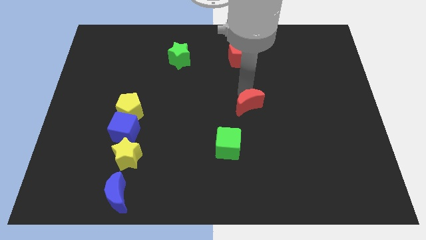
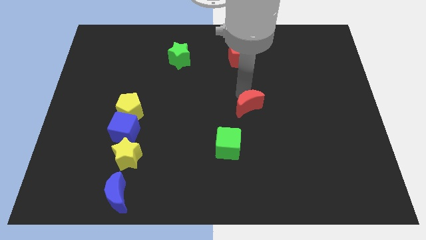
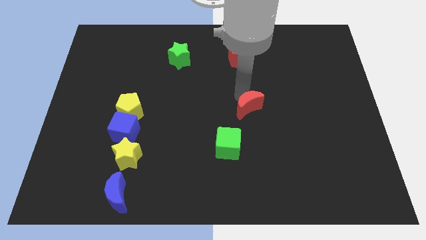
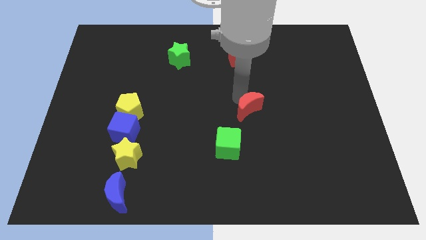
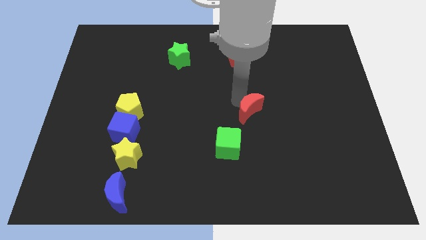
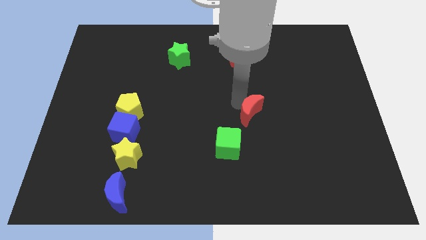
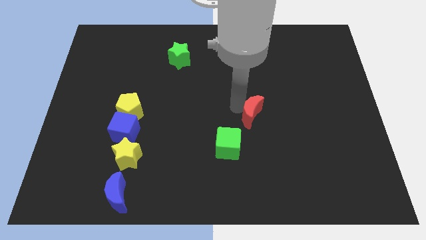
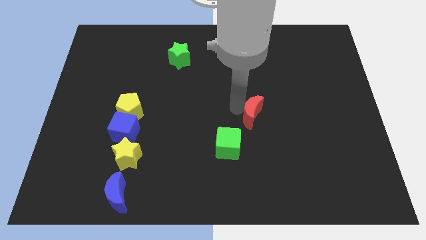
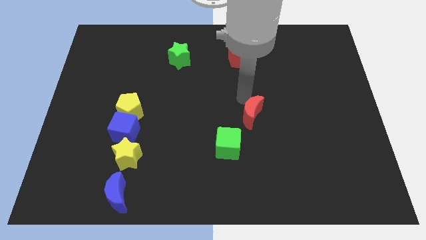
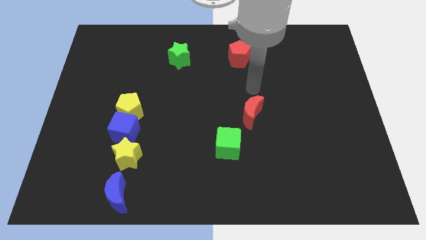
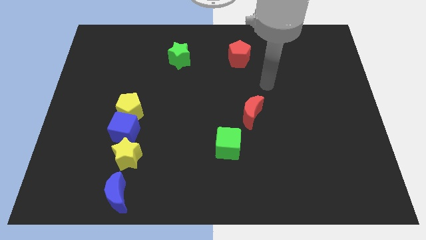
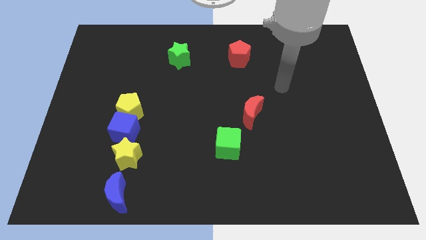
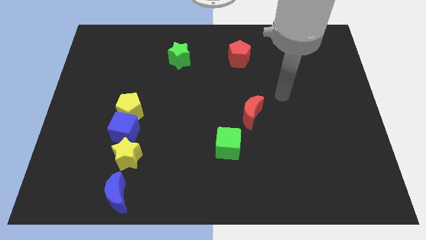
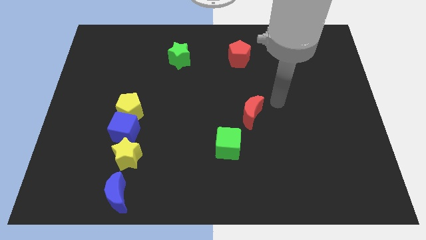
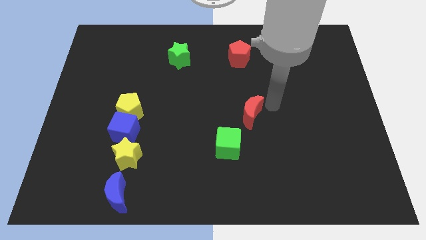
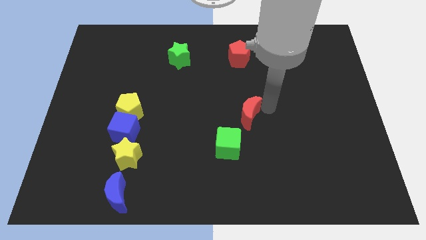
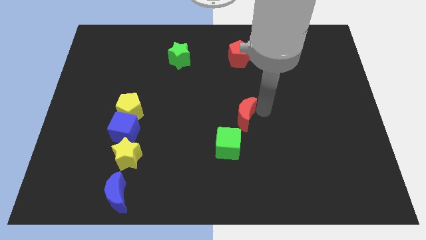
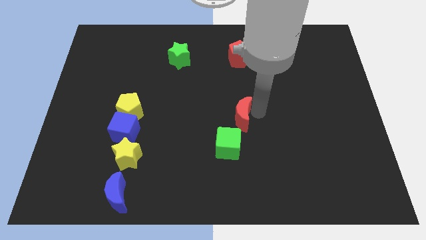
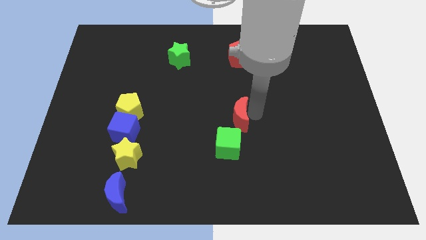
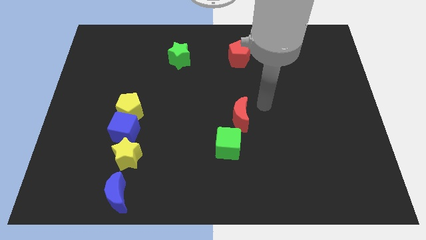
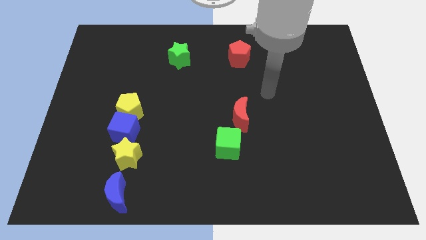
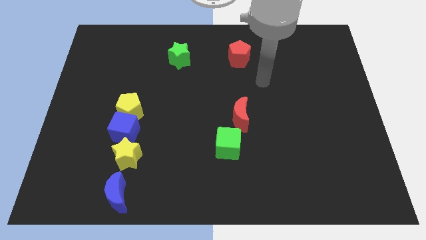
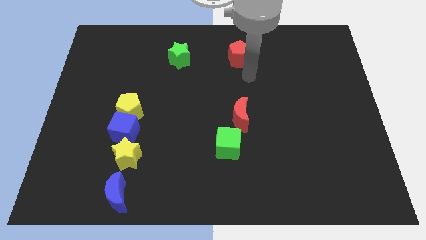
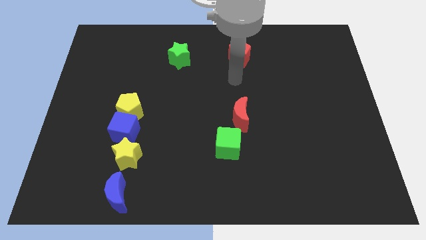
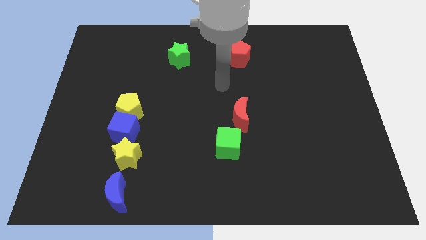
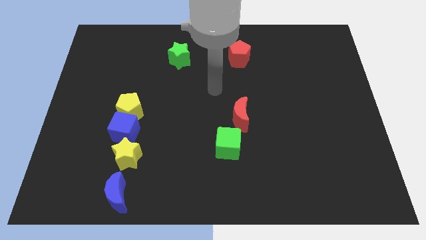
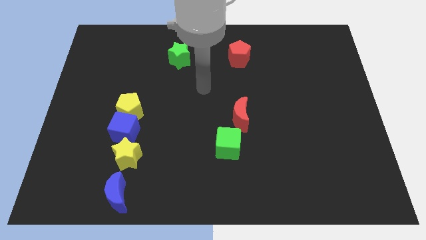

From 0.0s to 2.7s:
move the red moon horizontally on the right side of the yellow pentagon

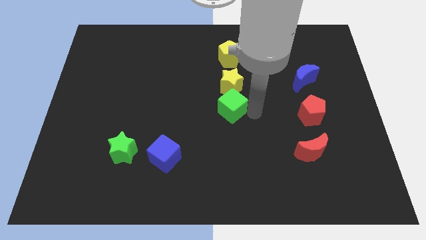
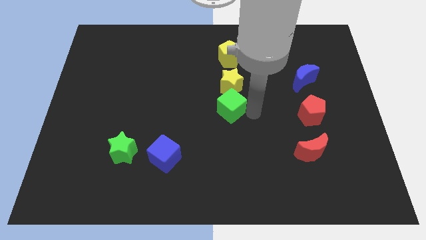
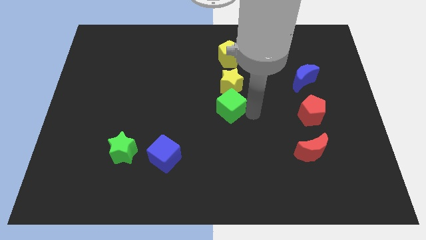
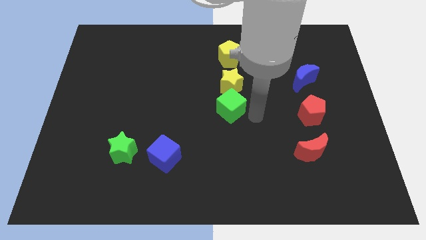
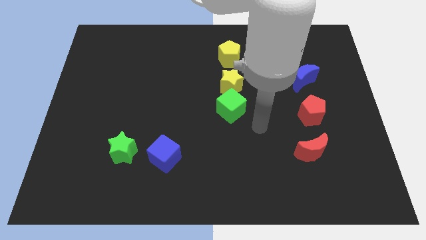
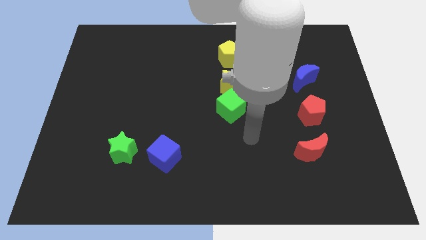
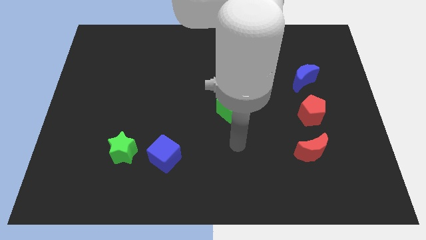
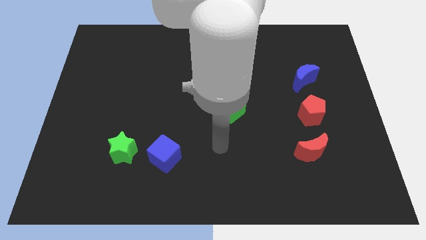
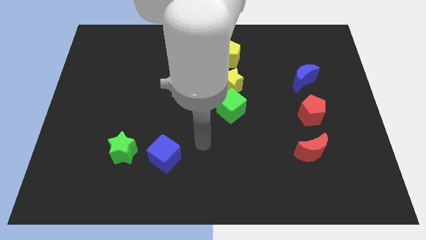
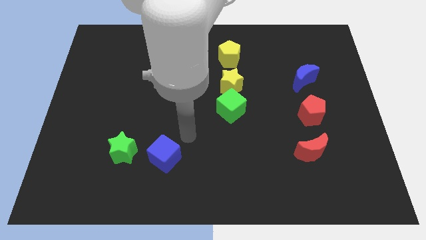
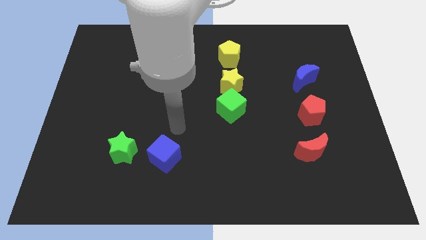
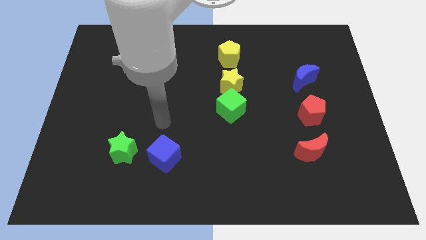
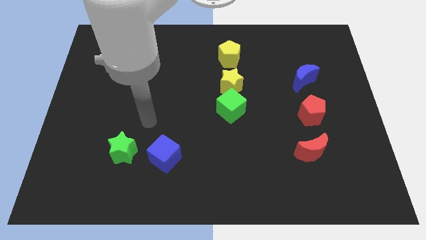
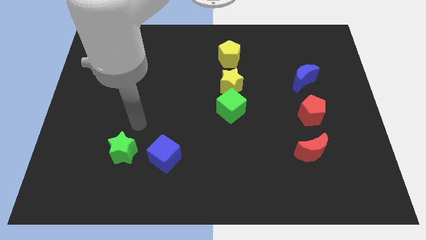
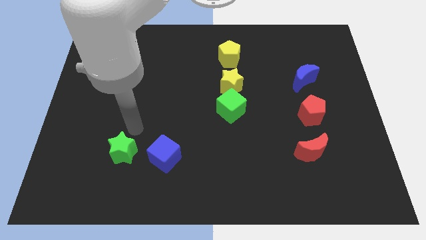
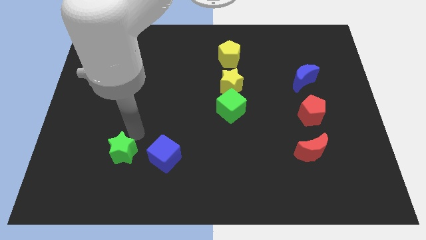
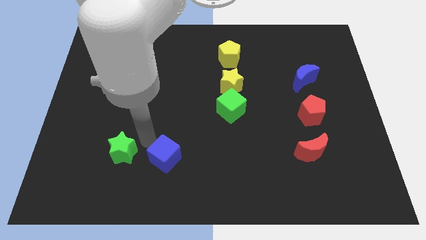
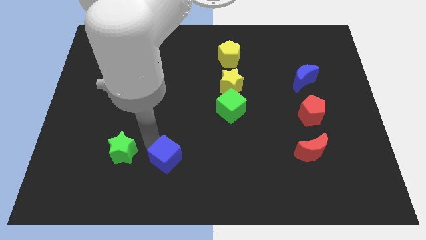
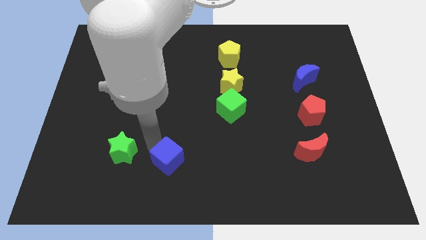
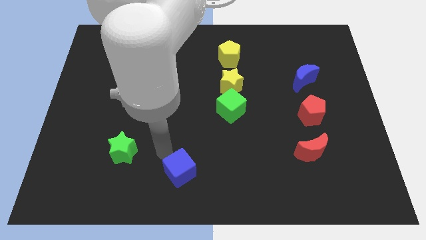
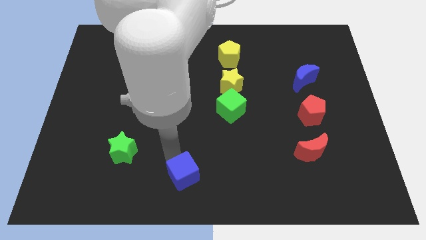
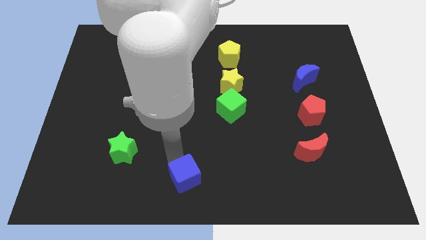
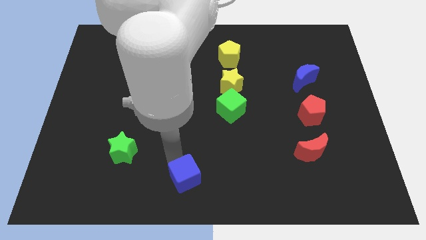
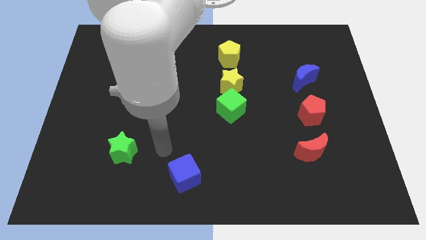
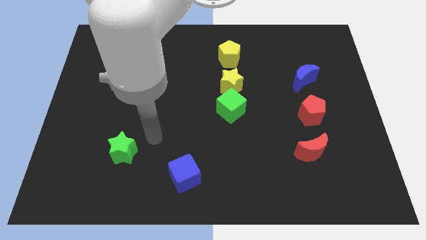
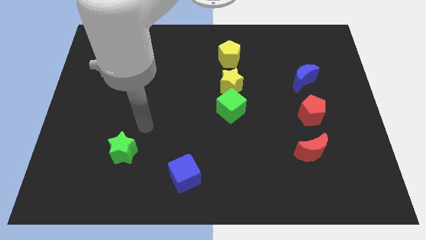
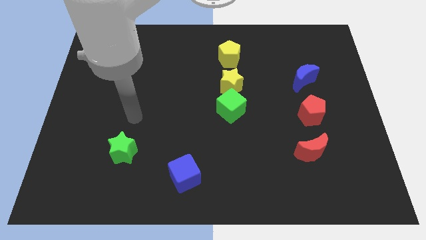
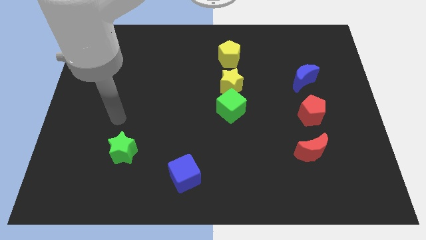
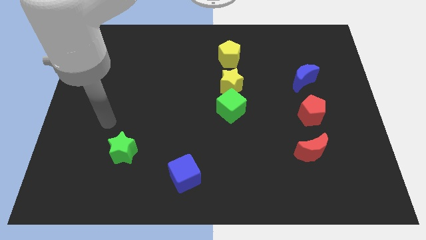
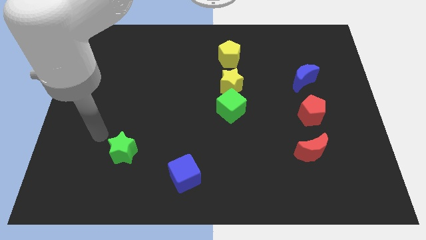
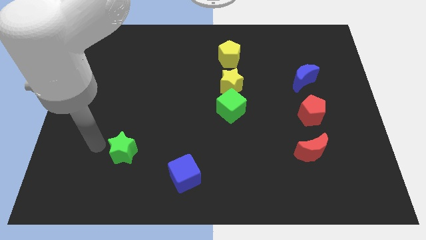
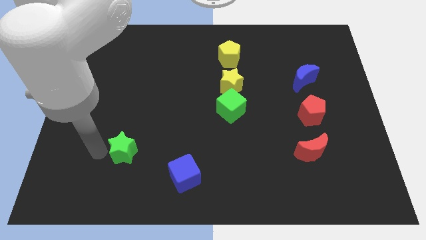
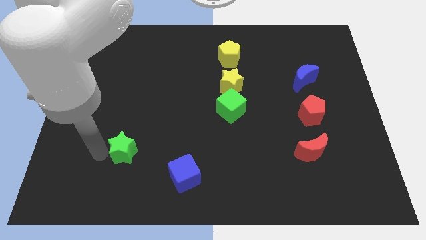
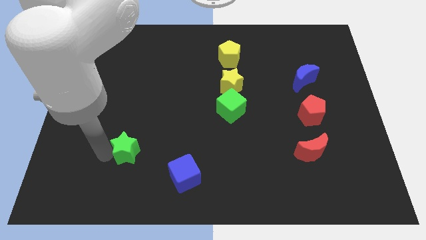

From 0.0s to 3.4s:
move the blue cube towards the bottom center of the board

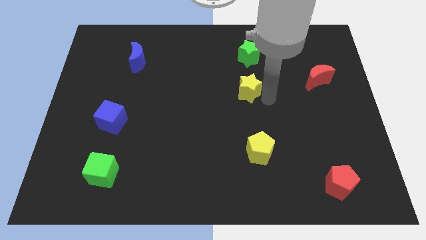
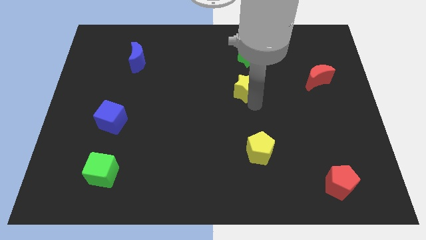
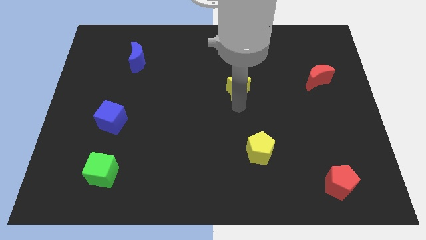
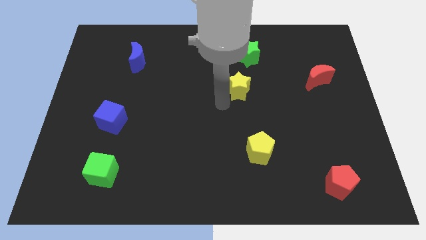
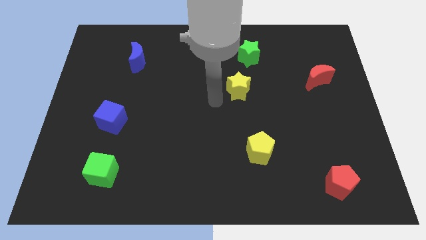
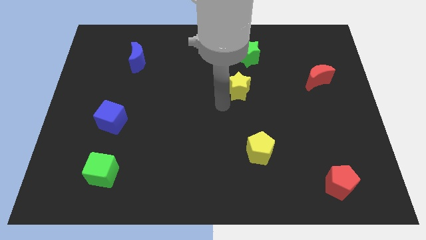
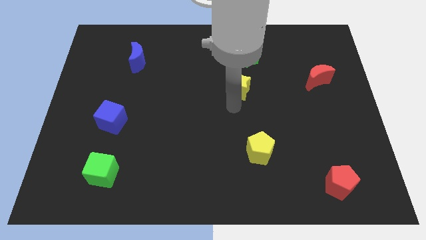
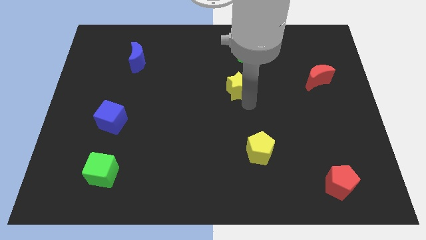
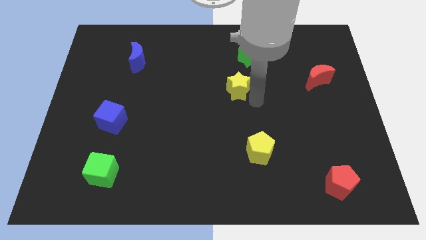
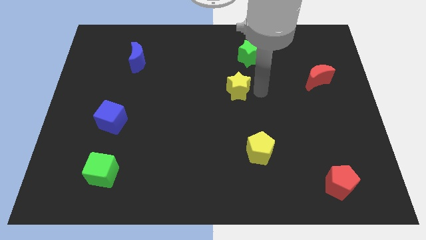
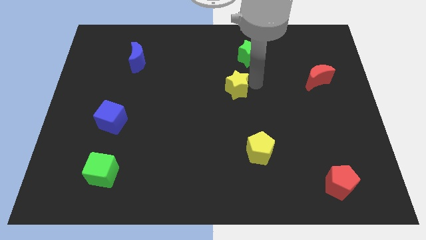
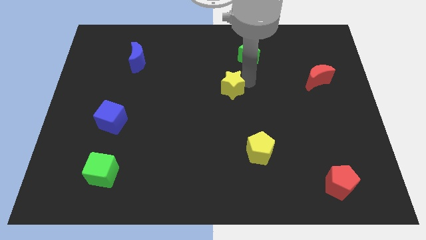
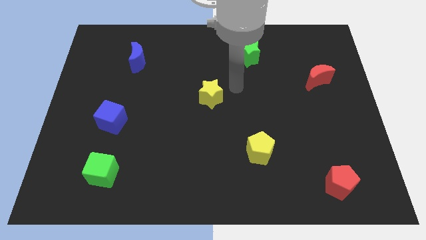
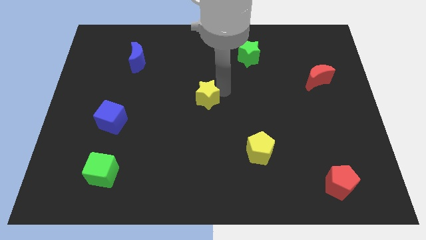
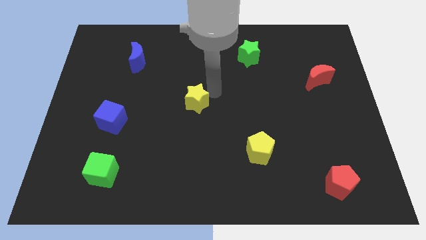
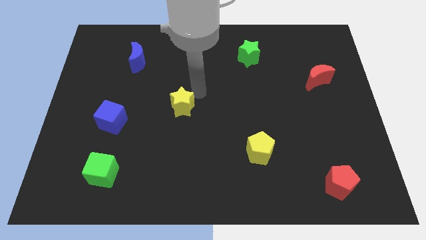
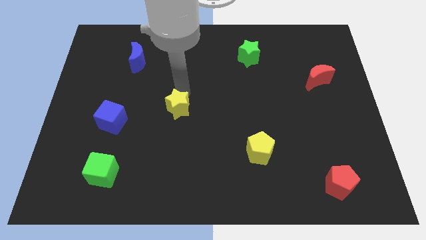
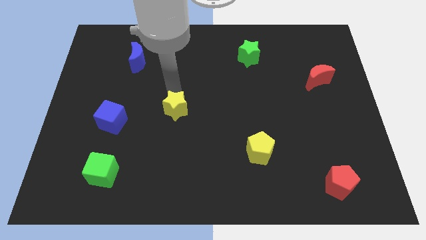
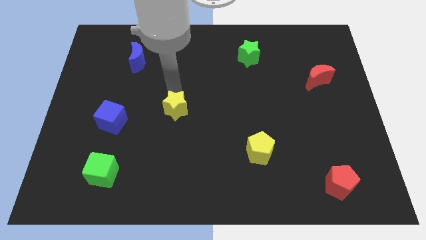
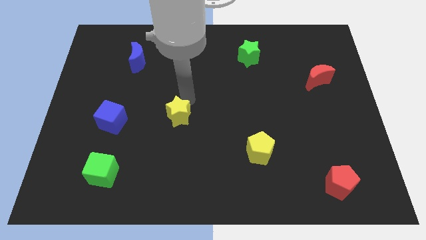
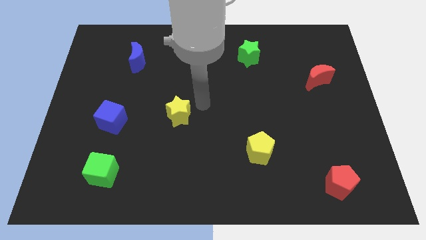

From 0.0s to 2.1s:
place yellow star to the right of blue cube

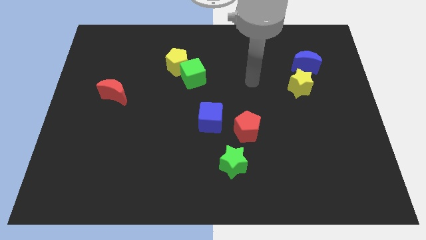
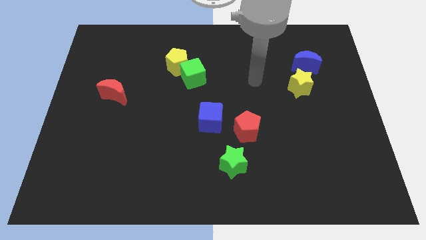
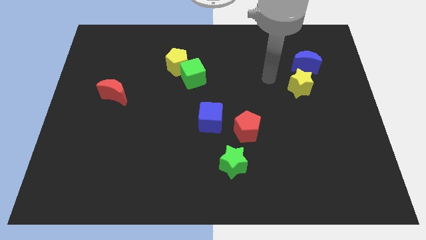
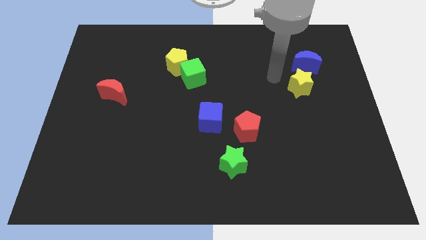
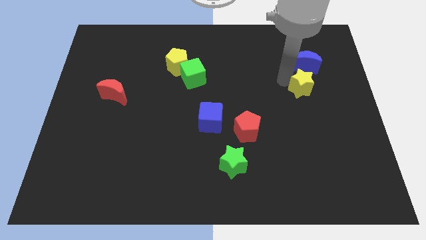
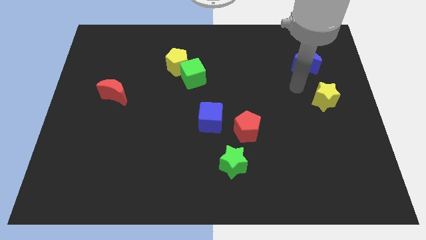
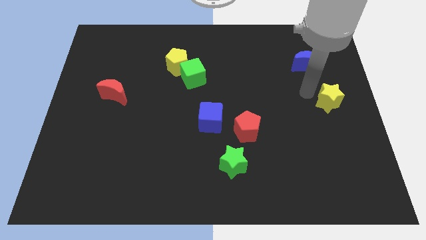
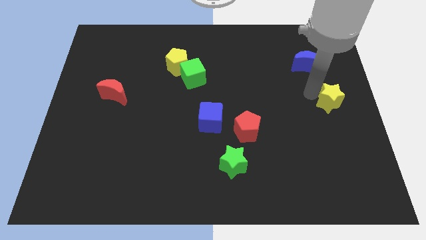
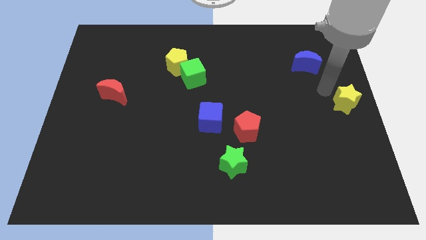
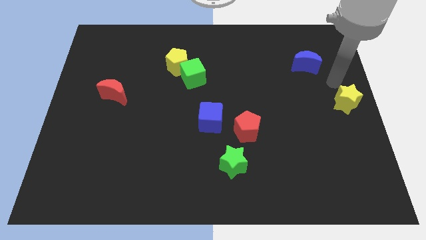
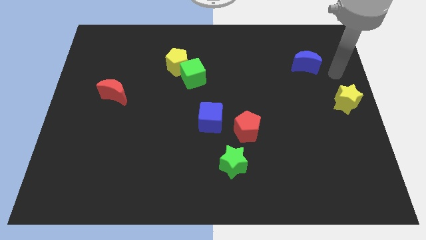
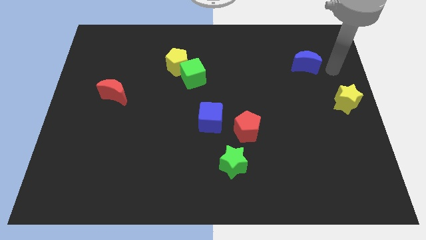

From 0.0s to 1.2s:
place the yellow star to the center right side of the board
